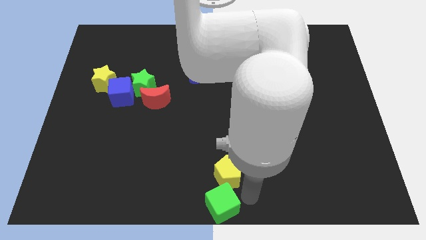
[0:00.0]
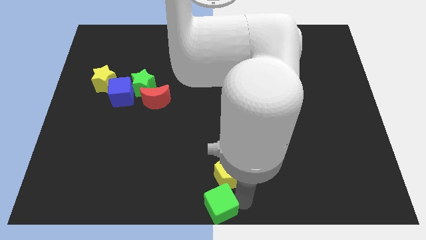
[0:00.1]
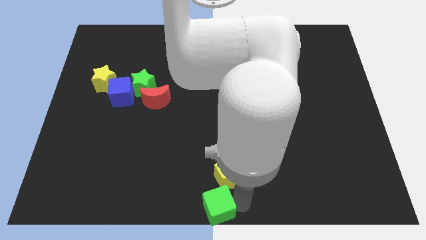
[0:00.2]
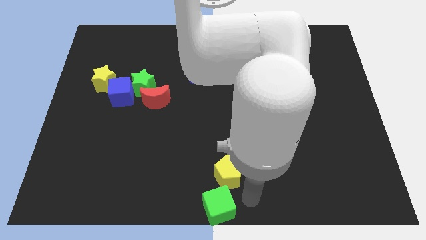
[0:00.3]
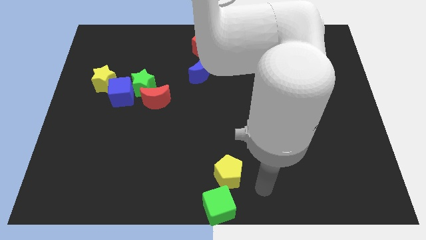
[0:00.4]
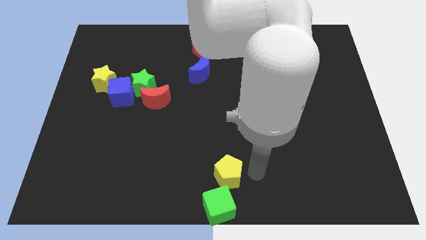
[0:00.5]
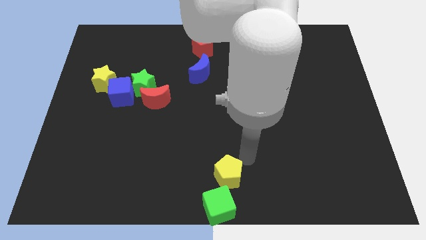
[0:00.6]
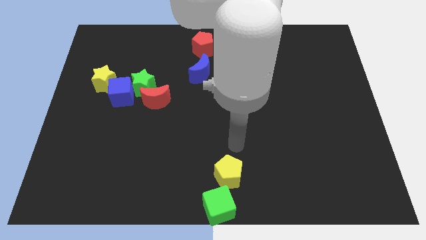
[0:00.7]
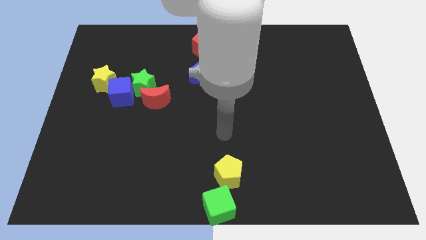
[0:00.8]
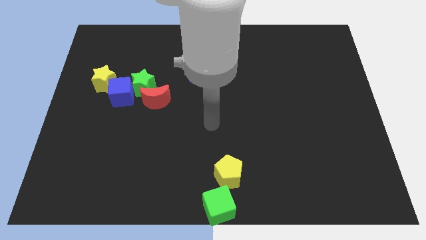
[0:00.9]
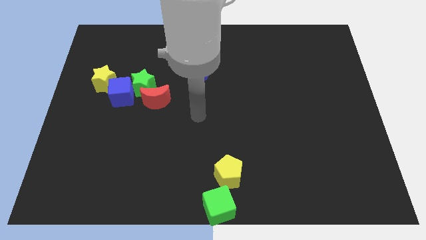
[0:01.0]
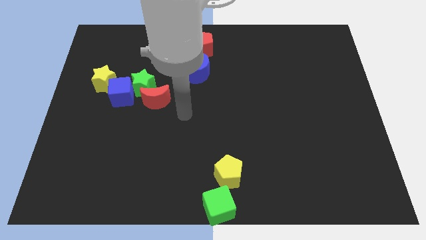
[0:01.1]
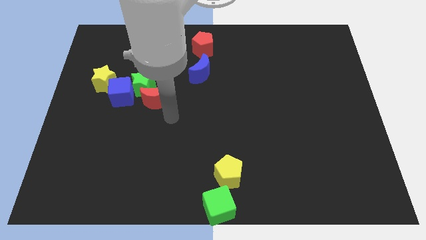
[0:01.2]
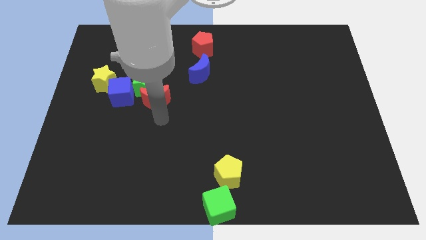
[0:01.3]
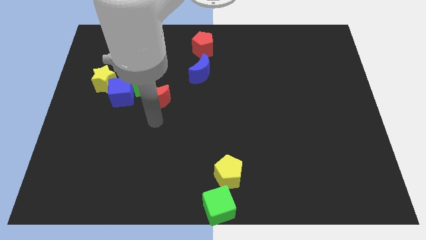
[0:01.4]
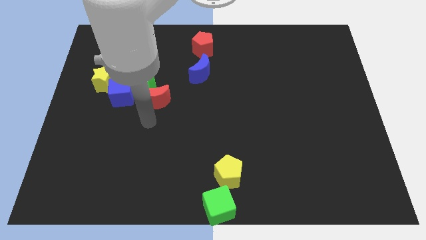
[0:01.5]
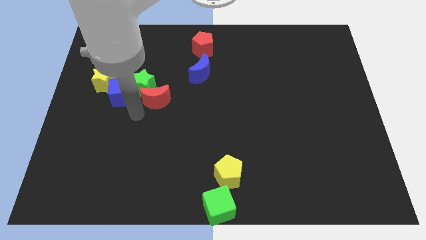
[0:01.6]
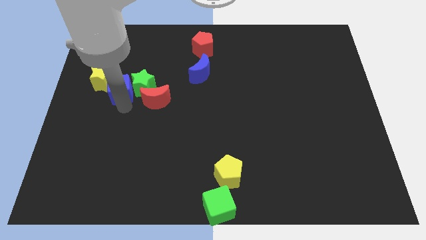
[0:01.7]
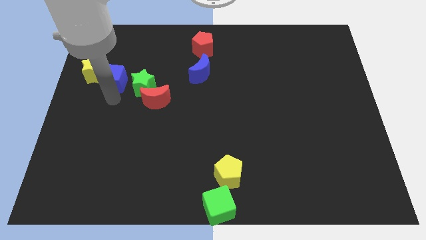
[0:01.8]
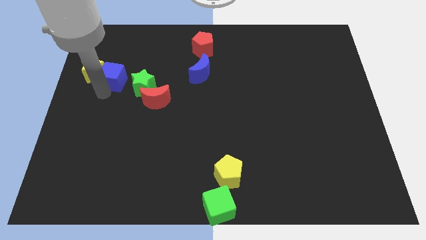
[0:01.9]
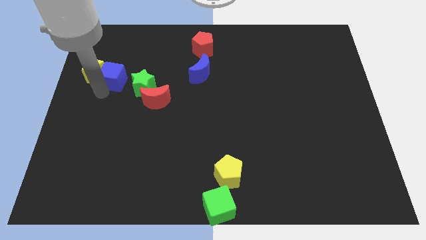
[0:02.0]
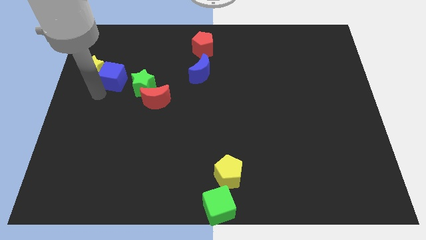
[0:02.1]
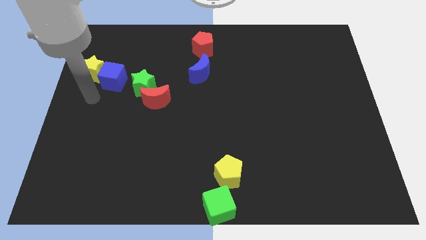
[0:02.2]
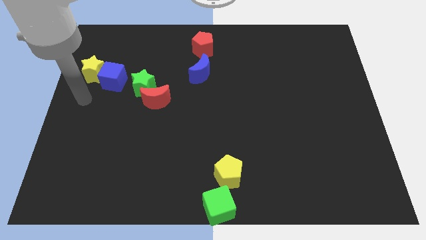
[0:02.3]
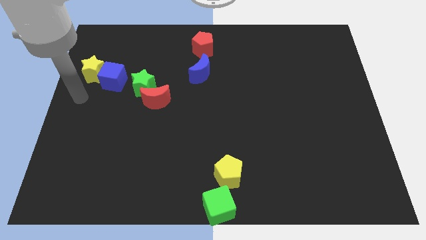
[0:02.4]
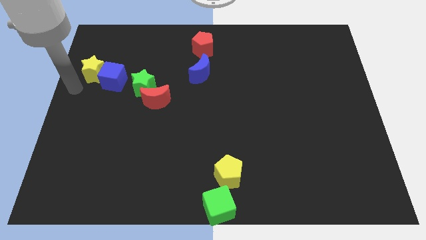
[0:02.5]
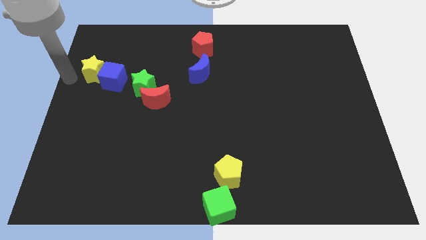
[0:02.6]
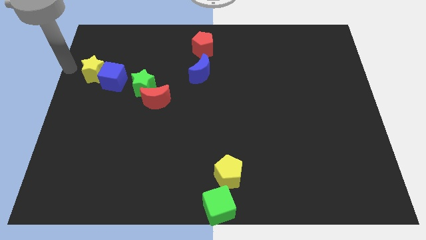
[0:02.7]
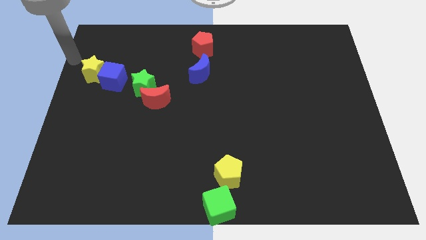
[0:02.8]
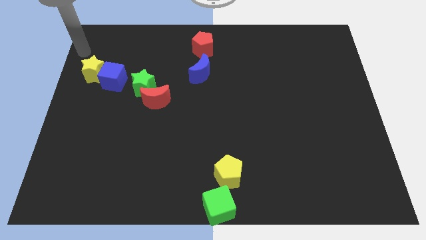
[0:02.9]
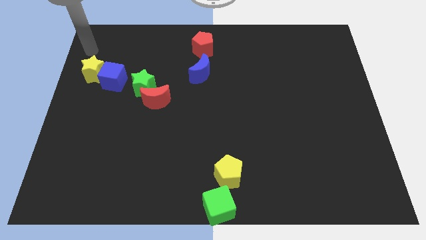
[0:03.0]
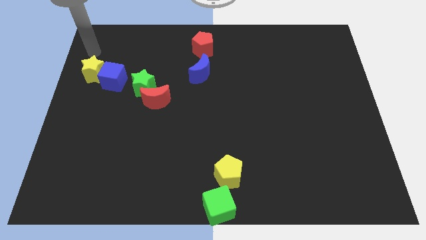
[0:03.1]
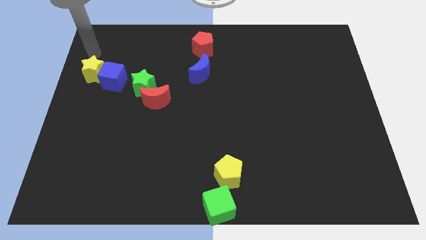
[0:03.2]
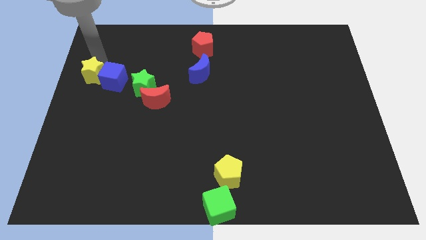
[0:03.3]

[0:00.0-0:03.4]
place blue cube to the right of yellow star

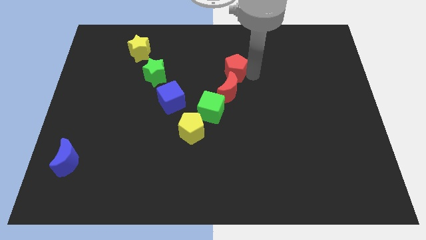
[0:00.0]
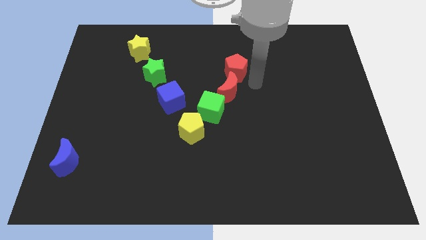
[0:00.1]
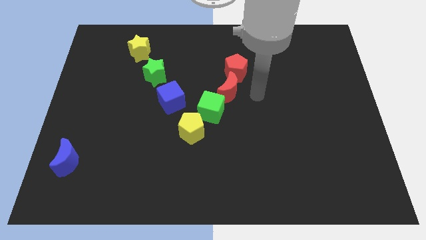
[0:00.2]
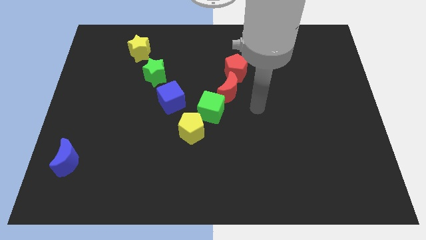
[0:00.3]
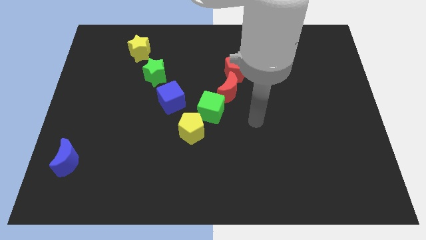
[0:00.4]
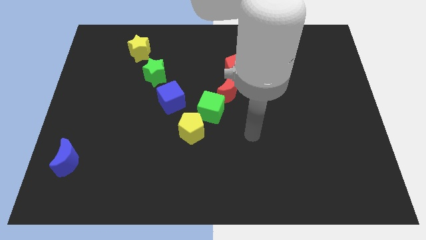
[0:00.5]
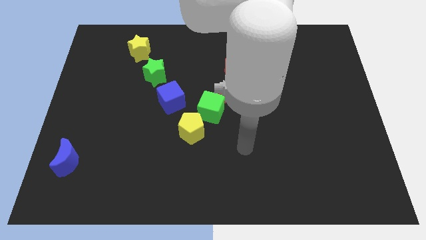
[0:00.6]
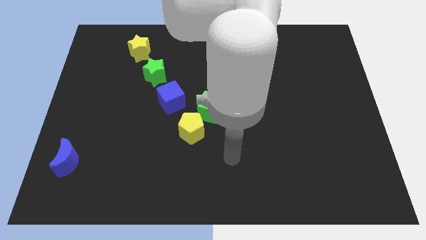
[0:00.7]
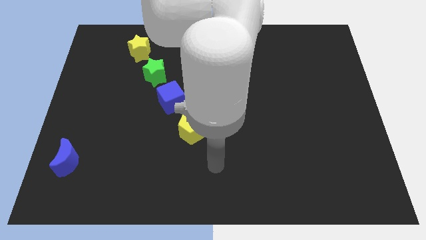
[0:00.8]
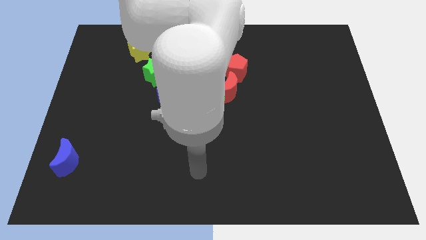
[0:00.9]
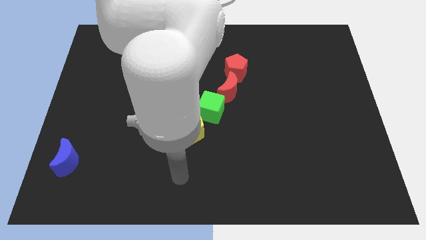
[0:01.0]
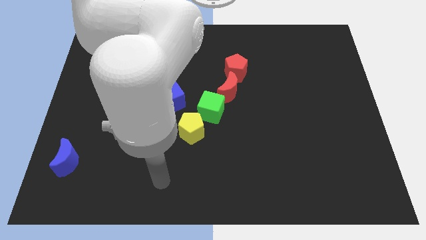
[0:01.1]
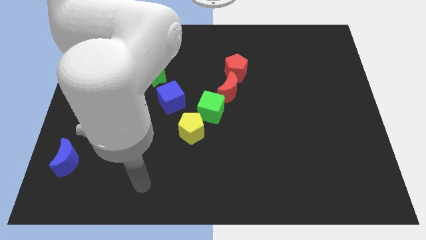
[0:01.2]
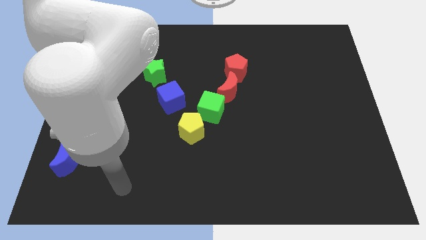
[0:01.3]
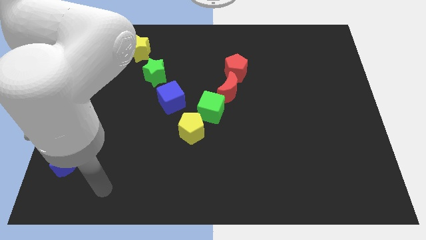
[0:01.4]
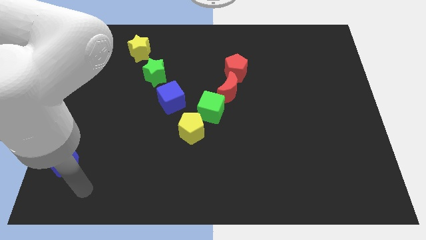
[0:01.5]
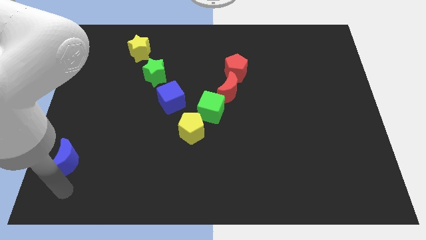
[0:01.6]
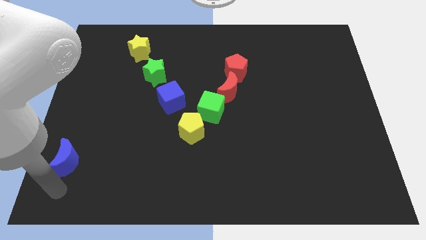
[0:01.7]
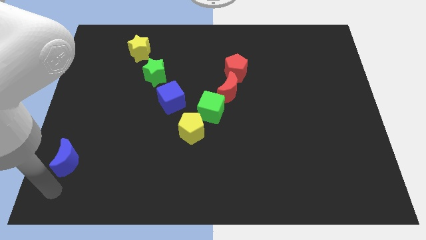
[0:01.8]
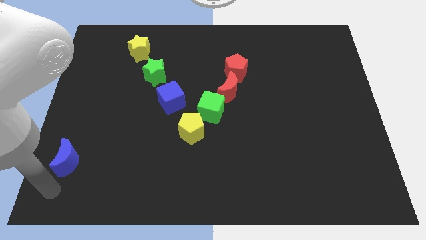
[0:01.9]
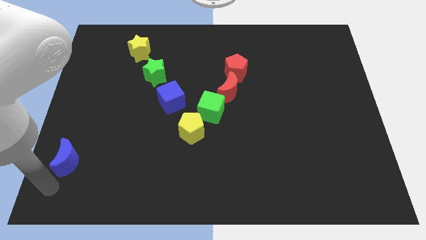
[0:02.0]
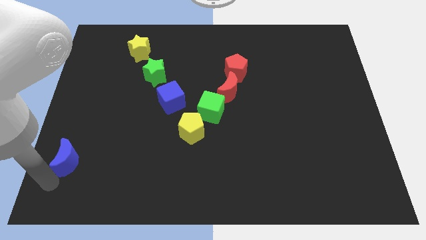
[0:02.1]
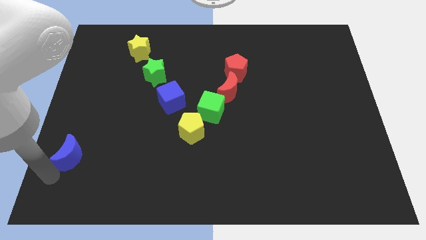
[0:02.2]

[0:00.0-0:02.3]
move the arm towards the blue crescent

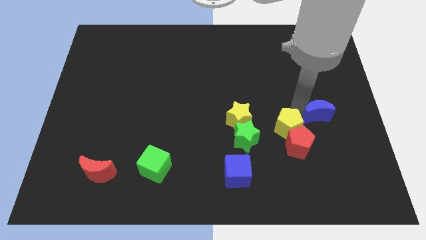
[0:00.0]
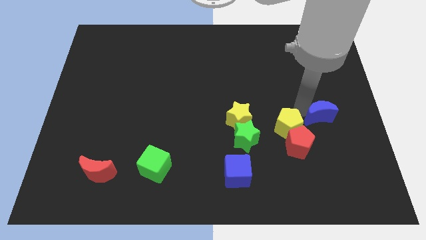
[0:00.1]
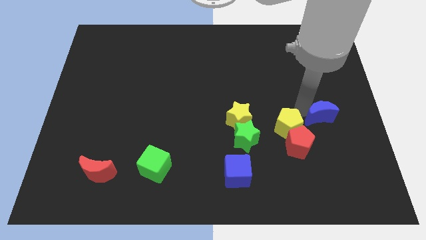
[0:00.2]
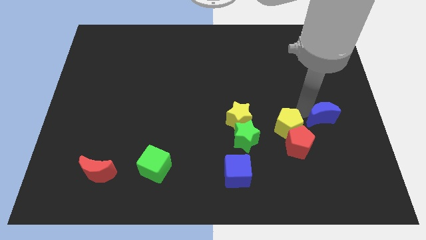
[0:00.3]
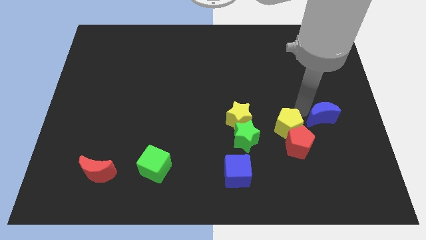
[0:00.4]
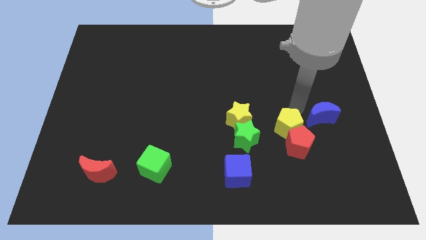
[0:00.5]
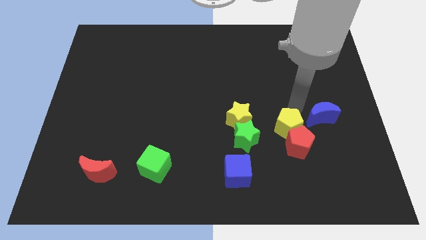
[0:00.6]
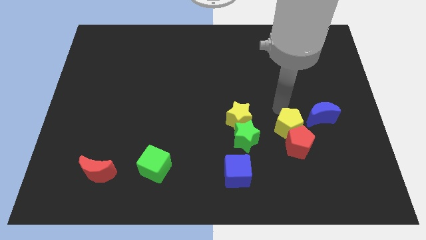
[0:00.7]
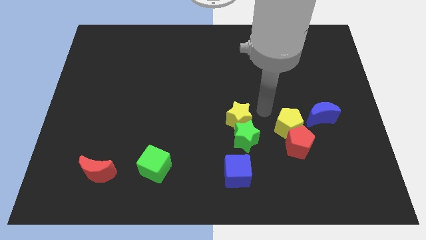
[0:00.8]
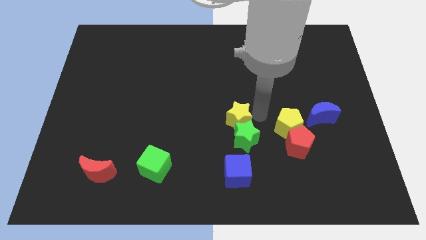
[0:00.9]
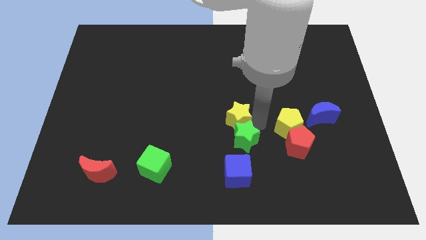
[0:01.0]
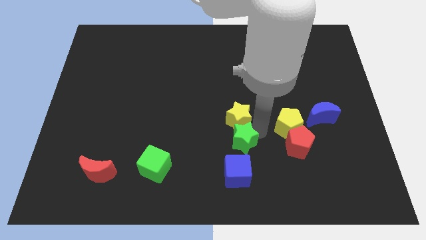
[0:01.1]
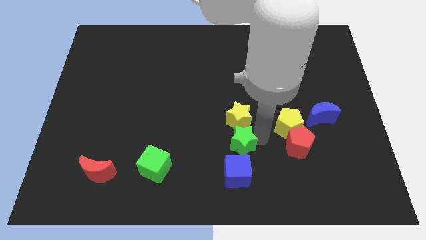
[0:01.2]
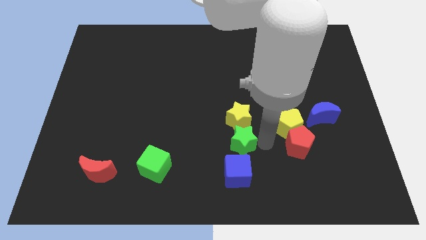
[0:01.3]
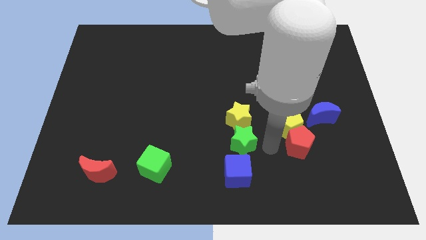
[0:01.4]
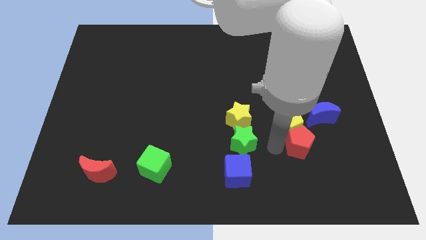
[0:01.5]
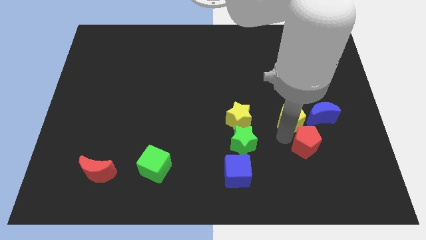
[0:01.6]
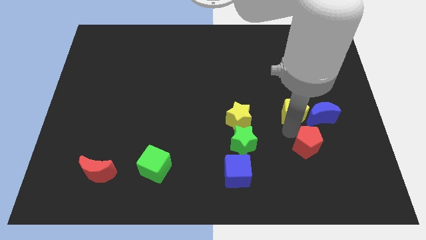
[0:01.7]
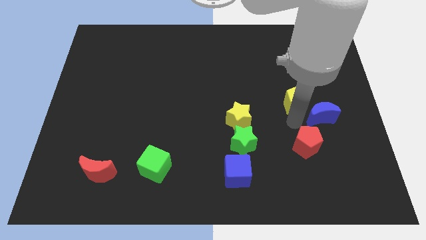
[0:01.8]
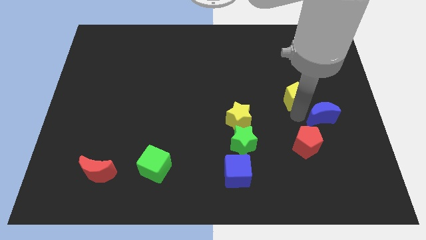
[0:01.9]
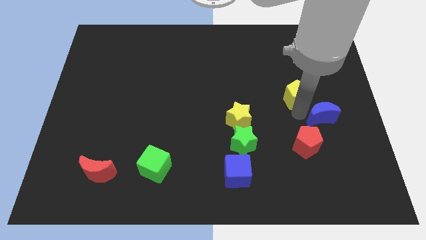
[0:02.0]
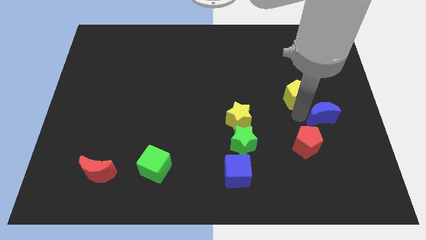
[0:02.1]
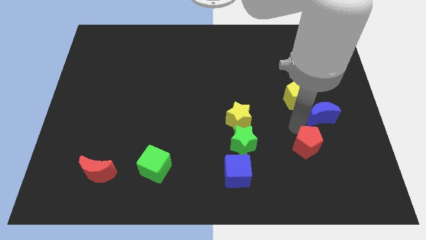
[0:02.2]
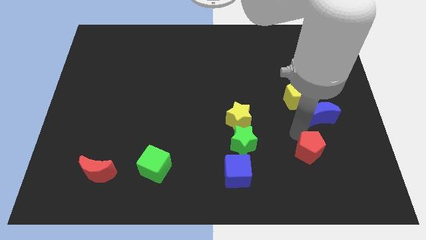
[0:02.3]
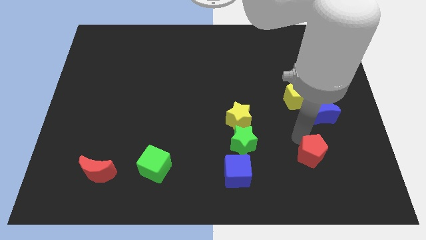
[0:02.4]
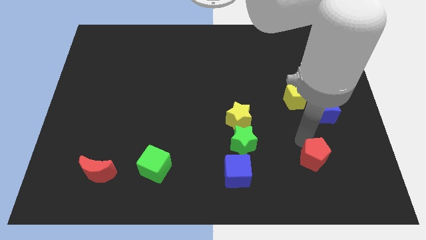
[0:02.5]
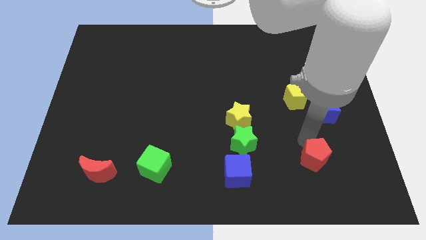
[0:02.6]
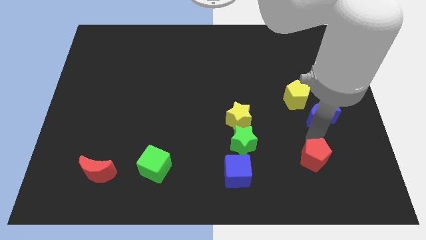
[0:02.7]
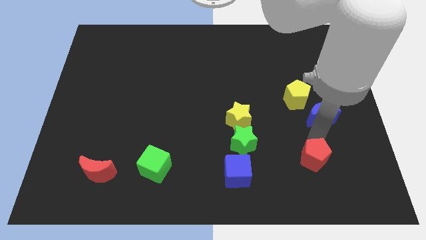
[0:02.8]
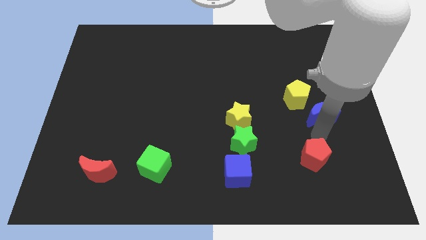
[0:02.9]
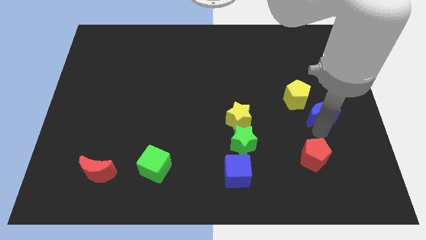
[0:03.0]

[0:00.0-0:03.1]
separate the red pentagon from the yellow pentagon

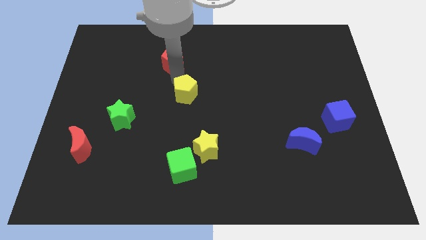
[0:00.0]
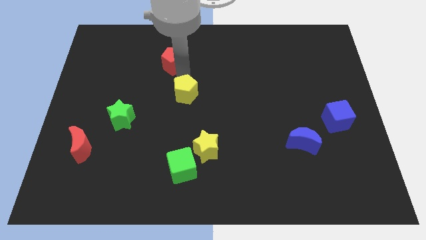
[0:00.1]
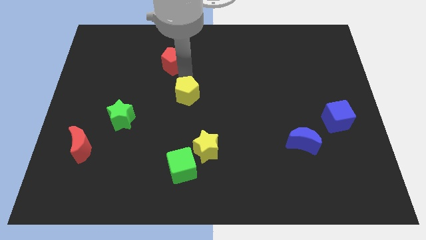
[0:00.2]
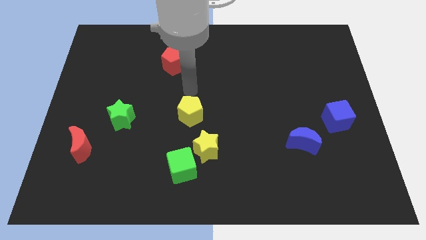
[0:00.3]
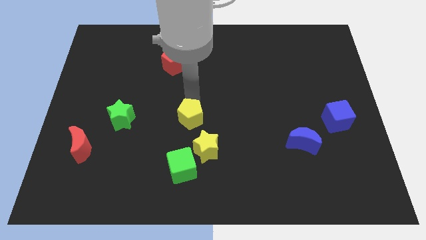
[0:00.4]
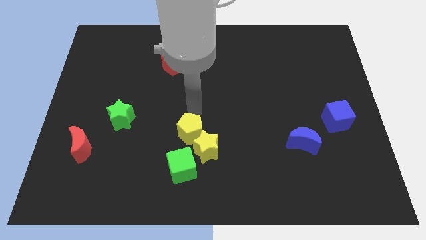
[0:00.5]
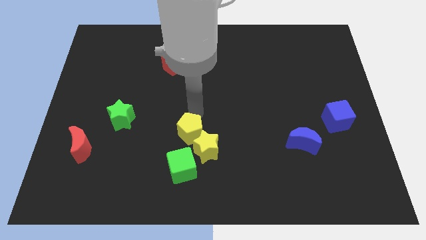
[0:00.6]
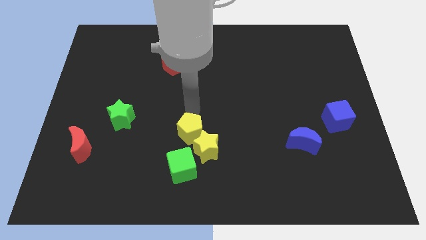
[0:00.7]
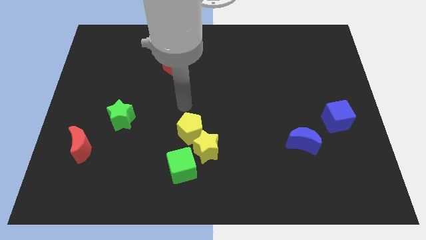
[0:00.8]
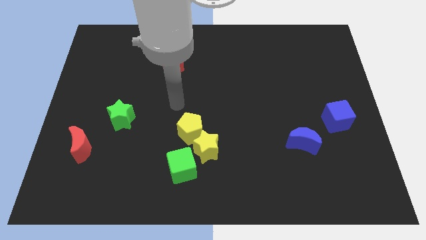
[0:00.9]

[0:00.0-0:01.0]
push the yellow pentagon towards the yellow star
